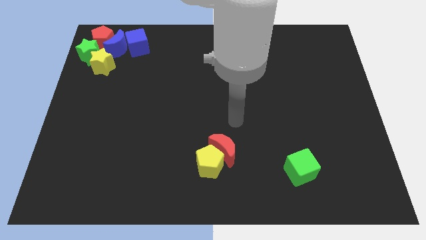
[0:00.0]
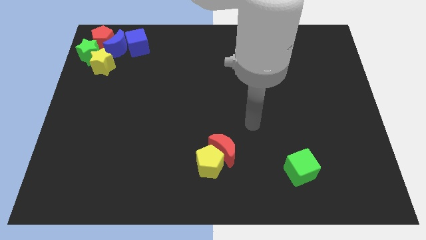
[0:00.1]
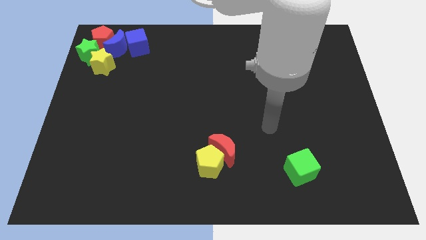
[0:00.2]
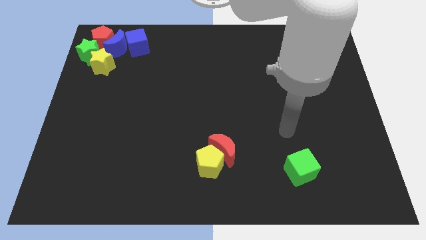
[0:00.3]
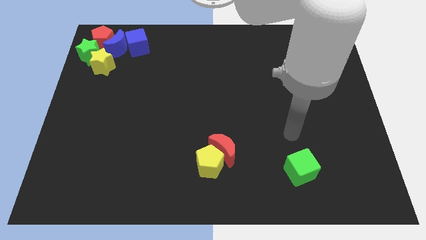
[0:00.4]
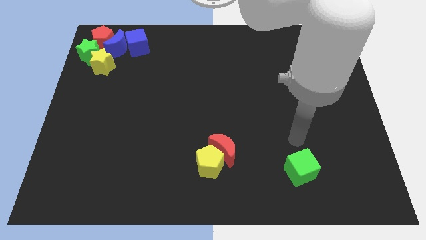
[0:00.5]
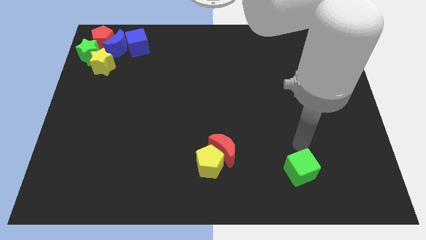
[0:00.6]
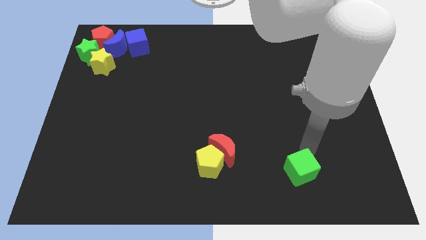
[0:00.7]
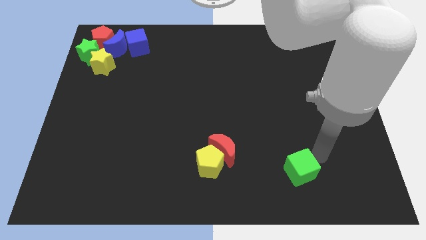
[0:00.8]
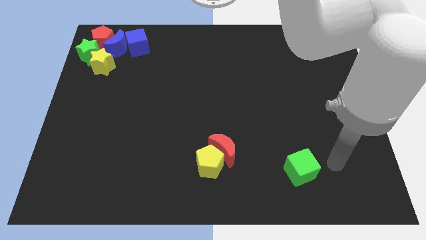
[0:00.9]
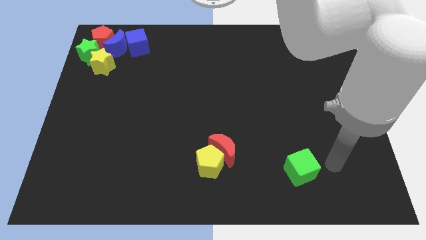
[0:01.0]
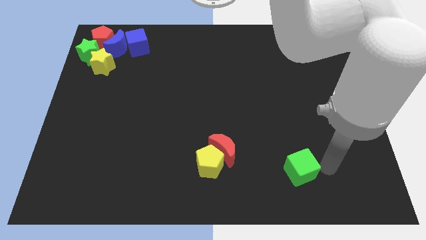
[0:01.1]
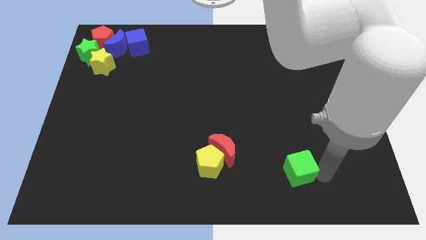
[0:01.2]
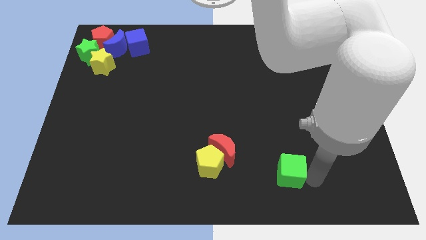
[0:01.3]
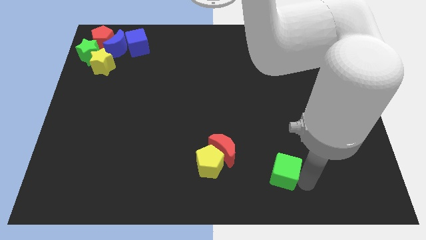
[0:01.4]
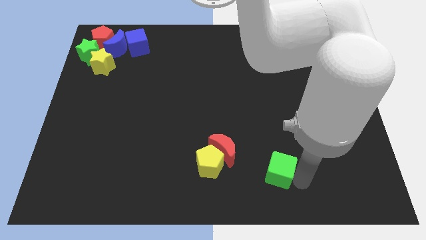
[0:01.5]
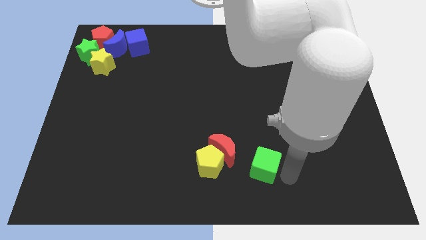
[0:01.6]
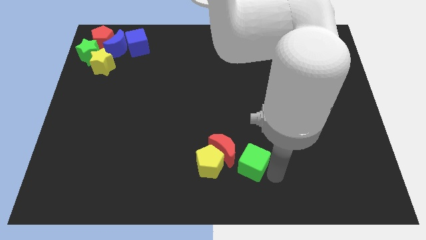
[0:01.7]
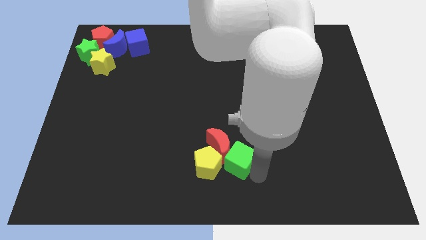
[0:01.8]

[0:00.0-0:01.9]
move the green cube close to the red crescent

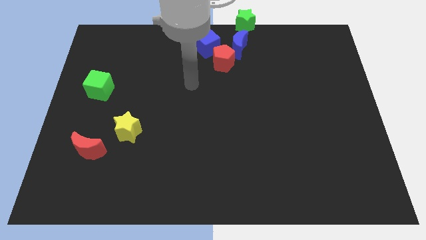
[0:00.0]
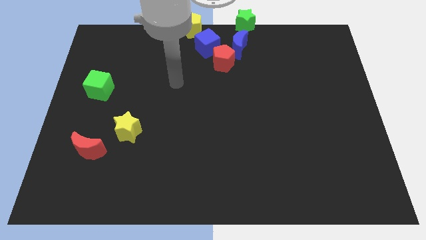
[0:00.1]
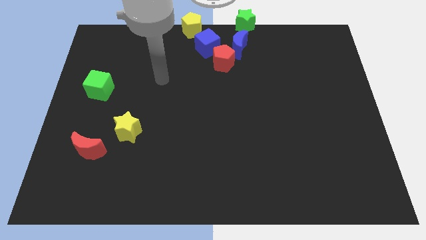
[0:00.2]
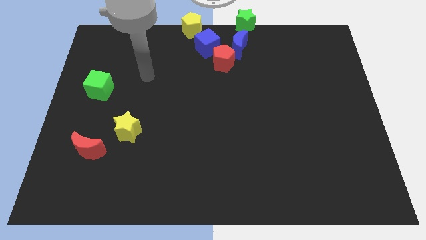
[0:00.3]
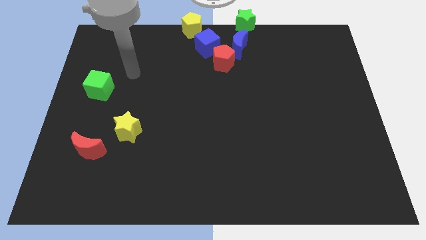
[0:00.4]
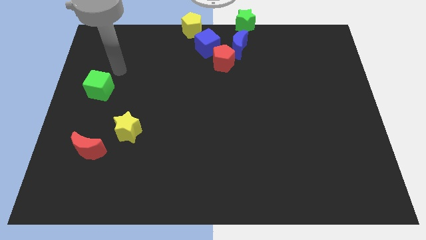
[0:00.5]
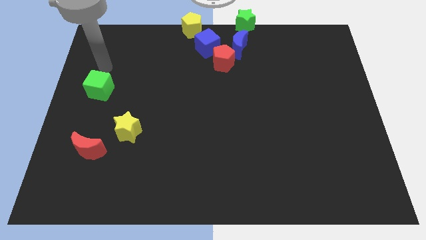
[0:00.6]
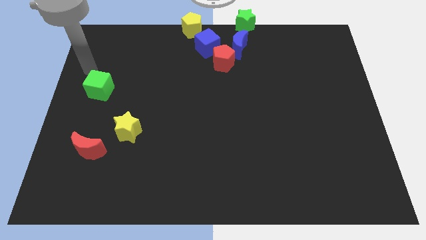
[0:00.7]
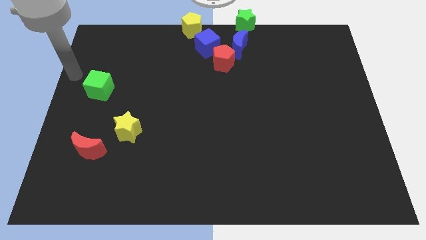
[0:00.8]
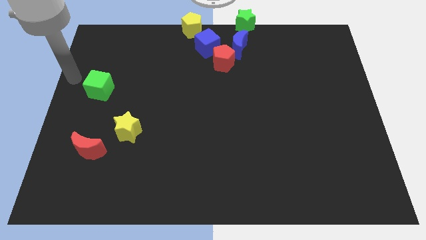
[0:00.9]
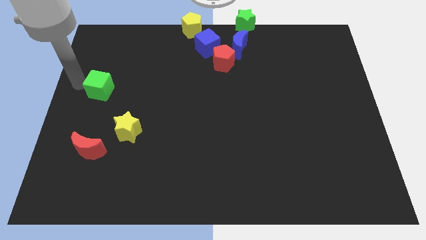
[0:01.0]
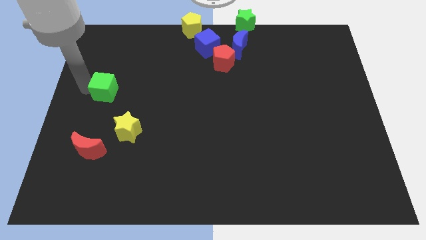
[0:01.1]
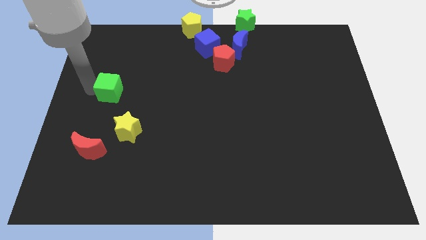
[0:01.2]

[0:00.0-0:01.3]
touch the green cube with the arm

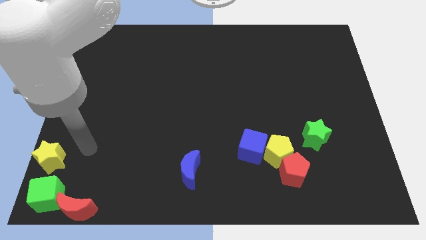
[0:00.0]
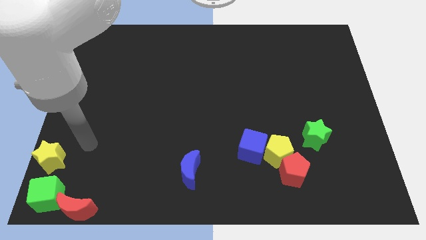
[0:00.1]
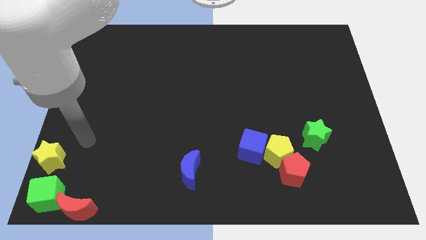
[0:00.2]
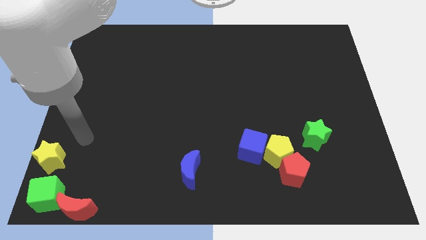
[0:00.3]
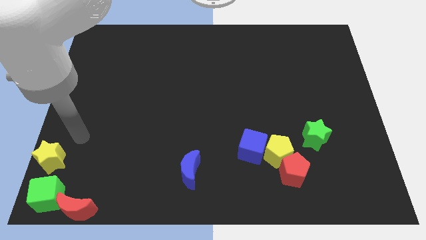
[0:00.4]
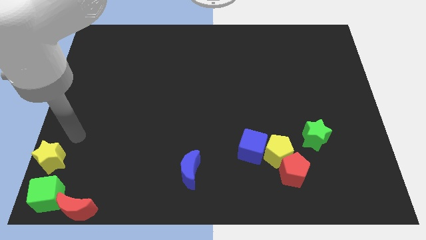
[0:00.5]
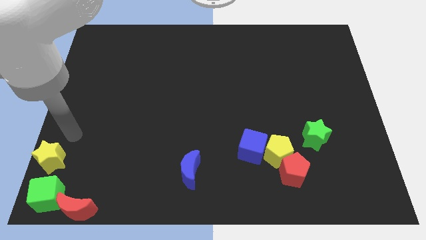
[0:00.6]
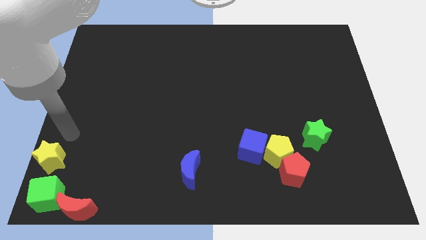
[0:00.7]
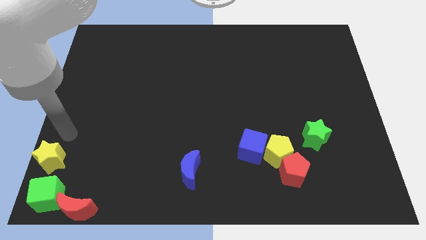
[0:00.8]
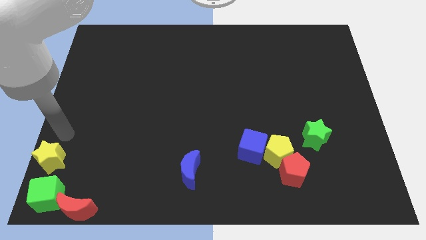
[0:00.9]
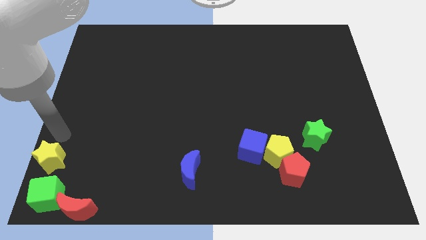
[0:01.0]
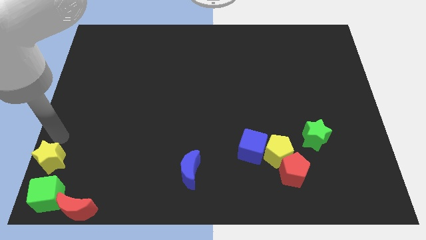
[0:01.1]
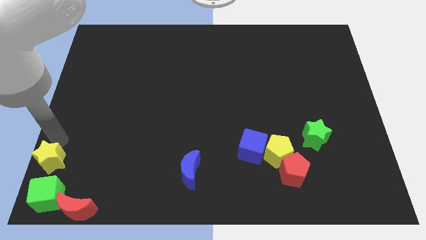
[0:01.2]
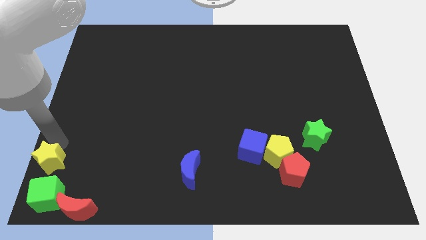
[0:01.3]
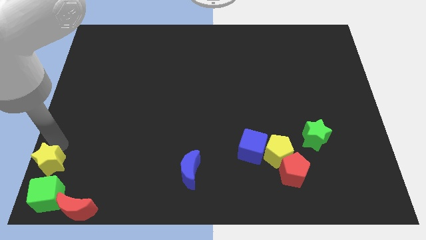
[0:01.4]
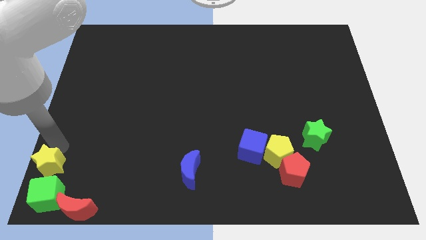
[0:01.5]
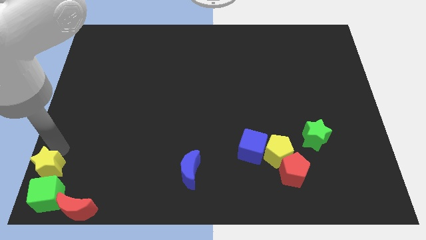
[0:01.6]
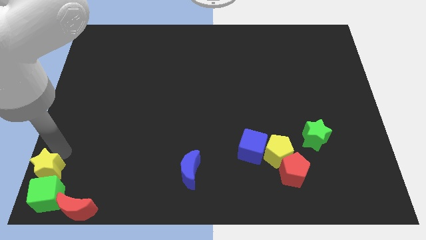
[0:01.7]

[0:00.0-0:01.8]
push the yellow star towards the green cube

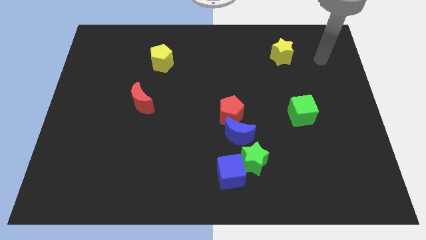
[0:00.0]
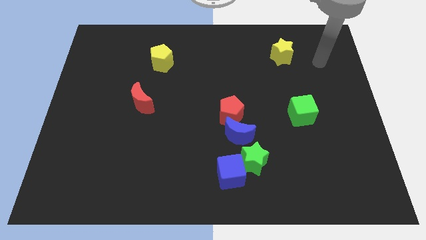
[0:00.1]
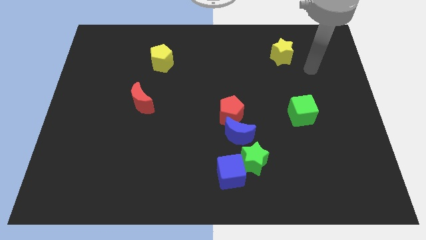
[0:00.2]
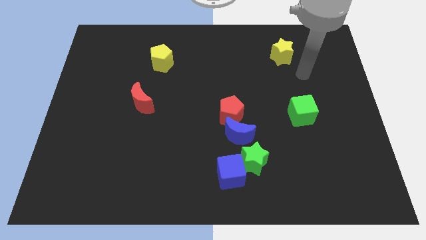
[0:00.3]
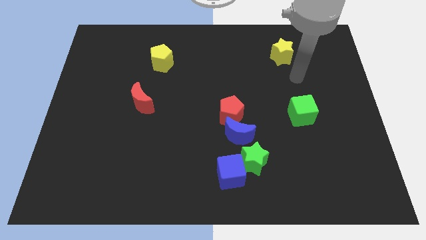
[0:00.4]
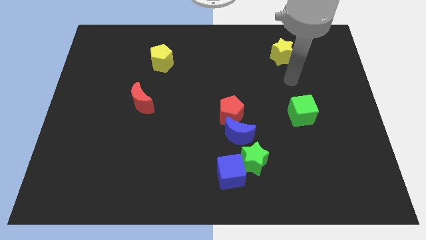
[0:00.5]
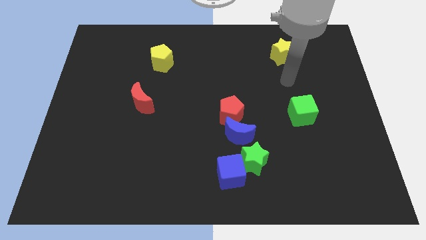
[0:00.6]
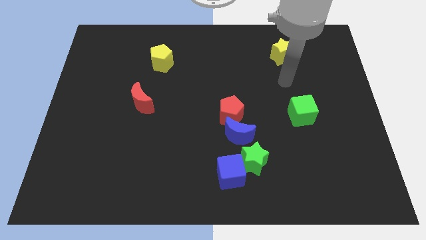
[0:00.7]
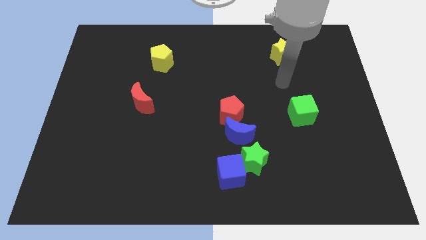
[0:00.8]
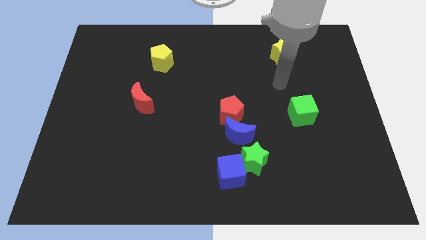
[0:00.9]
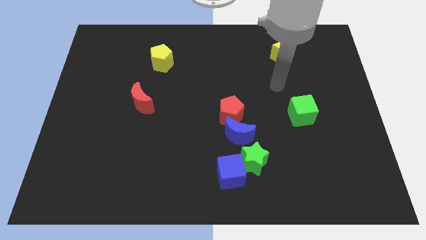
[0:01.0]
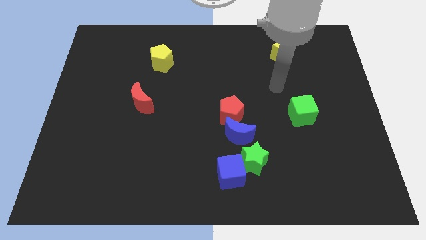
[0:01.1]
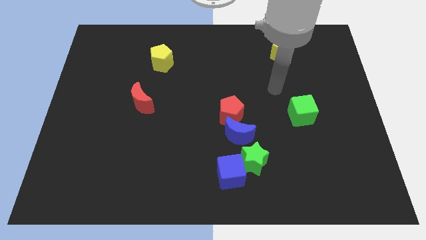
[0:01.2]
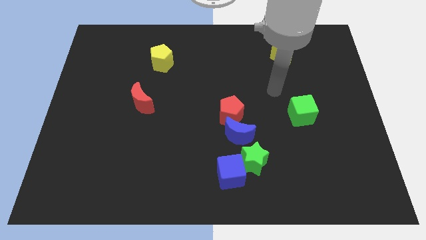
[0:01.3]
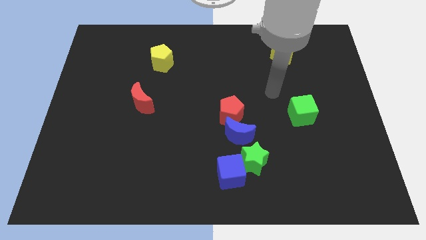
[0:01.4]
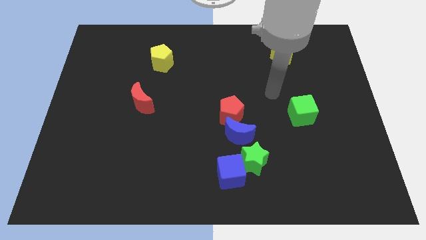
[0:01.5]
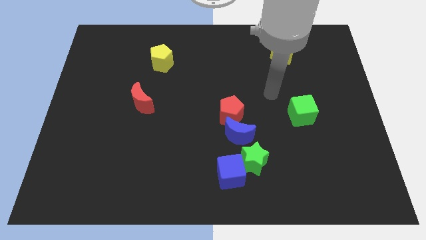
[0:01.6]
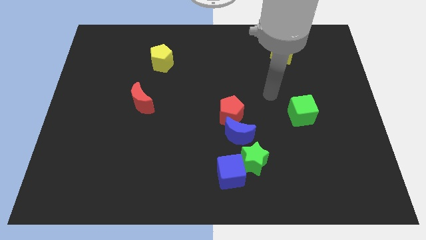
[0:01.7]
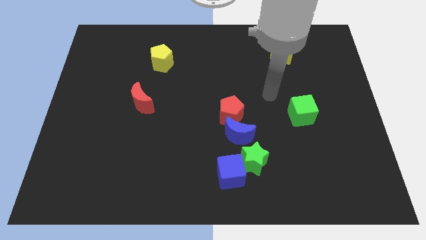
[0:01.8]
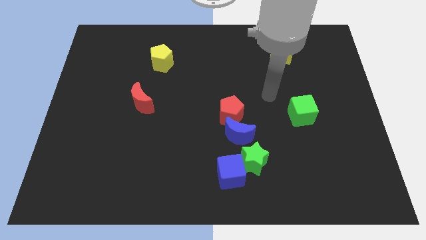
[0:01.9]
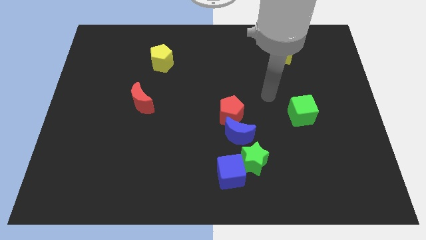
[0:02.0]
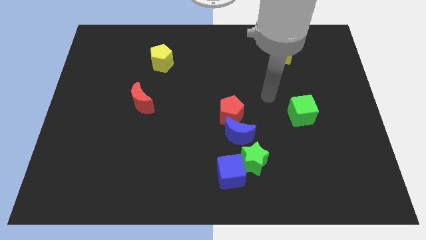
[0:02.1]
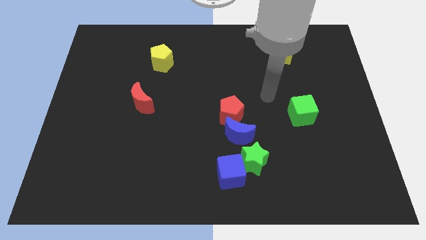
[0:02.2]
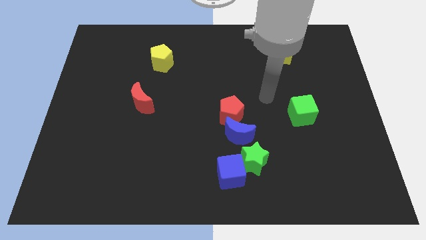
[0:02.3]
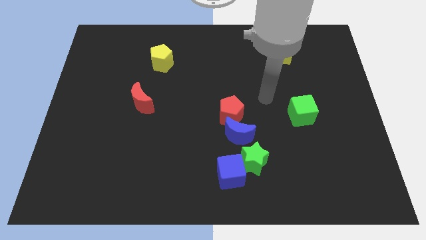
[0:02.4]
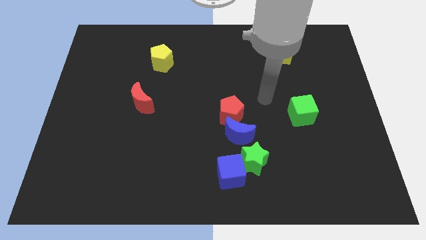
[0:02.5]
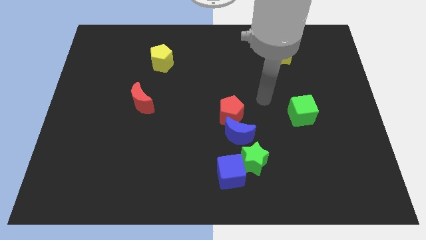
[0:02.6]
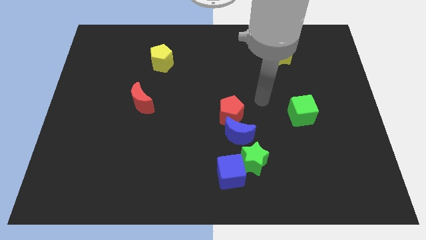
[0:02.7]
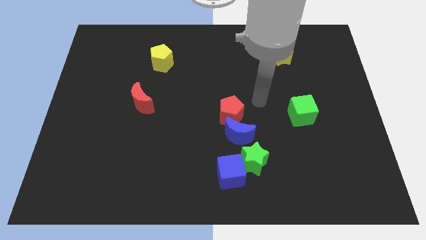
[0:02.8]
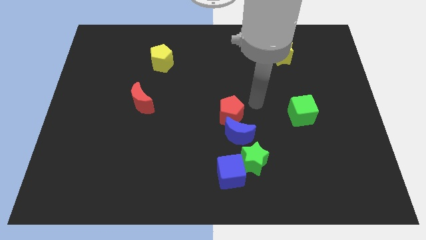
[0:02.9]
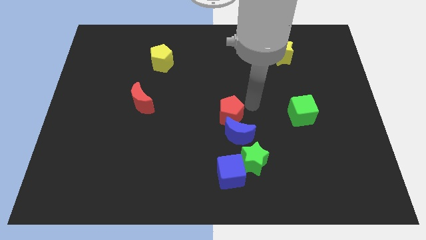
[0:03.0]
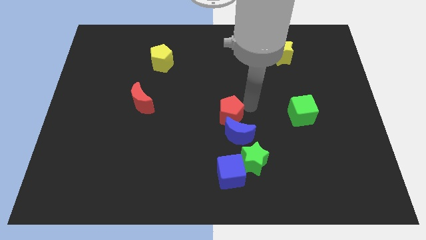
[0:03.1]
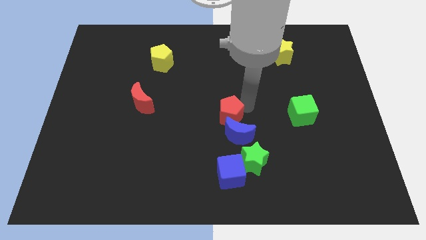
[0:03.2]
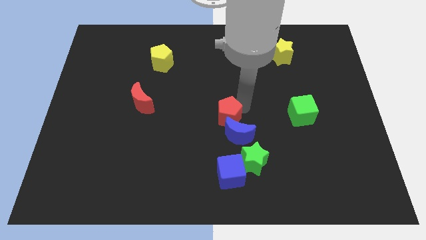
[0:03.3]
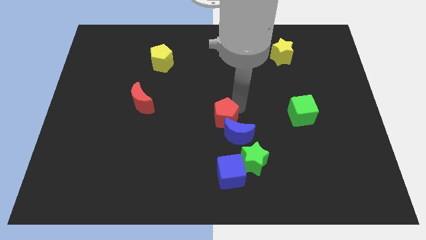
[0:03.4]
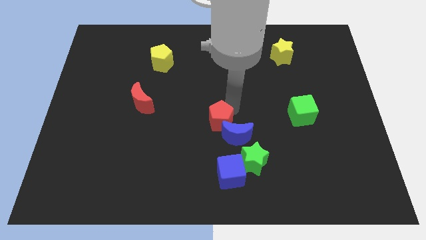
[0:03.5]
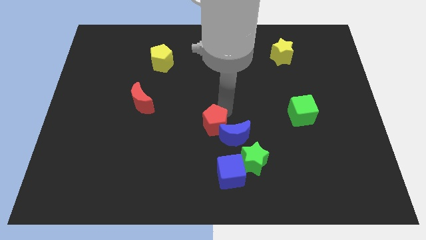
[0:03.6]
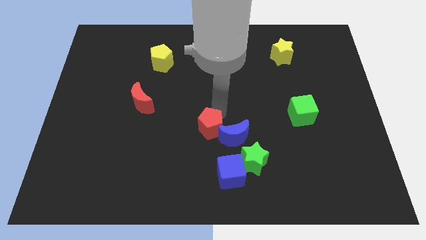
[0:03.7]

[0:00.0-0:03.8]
push the blue moon with red pentagon slightly downwards

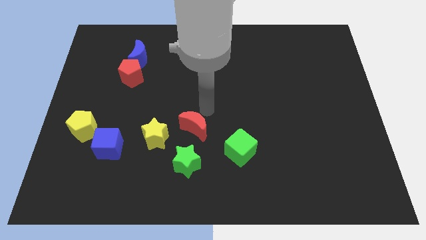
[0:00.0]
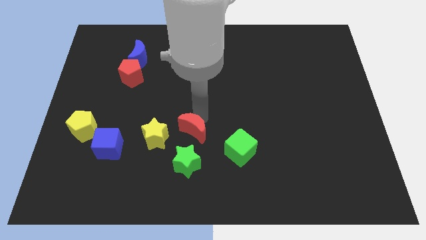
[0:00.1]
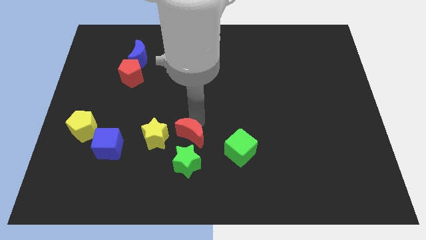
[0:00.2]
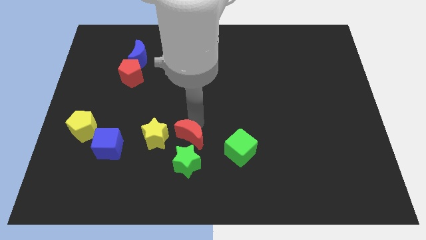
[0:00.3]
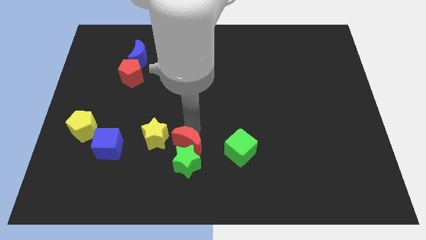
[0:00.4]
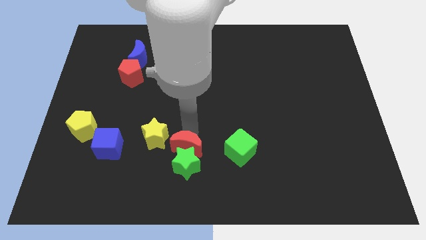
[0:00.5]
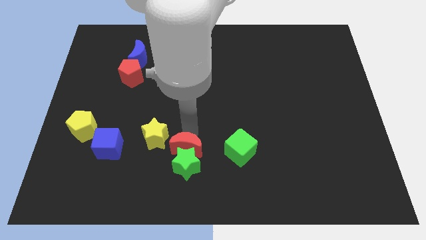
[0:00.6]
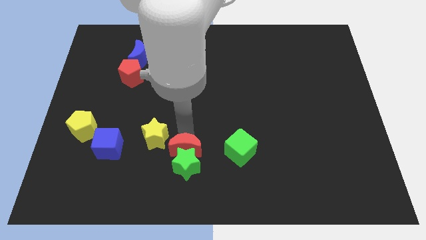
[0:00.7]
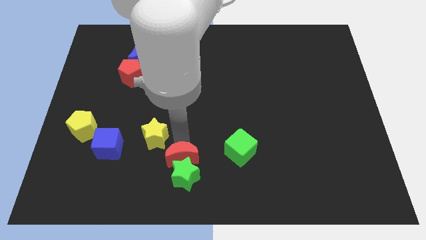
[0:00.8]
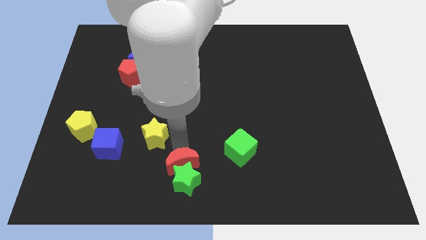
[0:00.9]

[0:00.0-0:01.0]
place the red crescent above the green star
